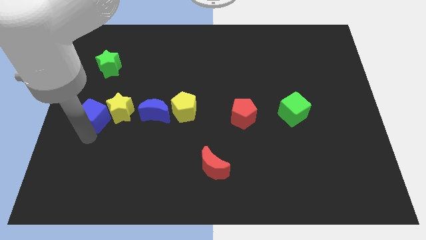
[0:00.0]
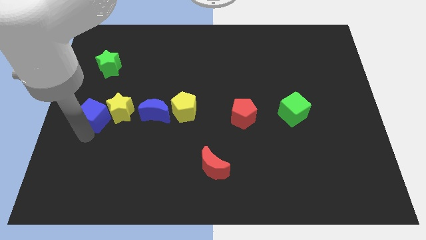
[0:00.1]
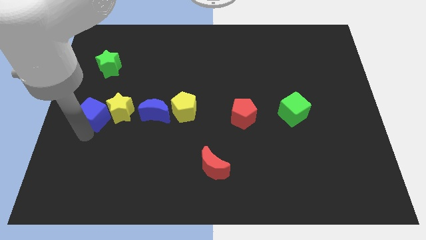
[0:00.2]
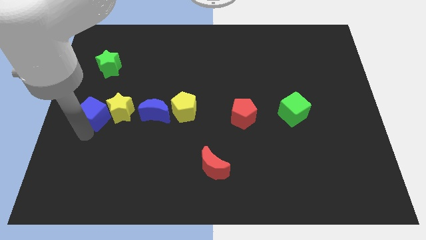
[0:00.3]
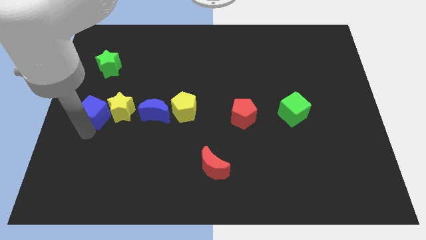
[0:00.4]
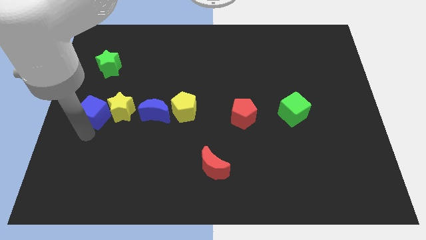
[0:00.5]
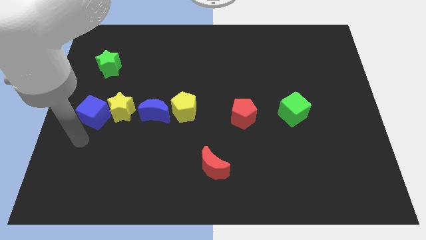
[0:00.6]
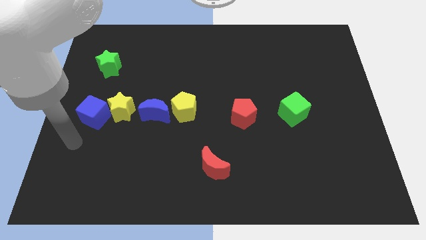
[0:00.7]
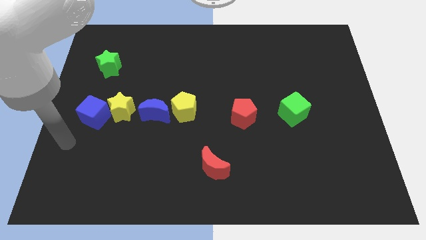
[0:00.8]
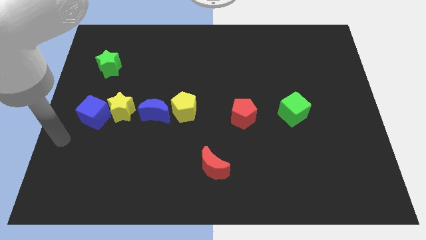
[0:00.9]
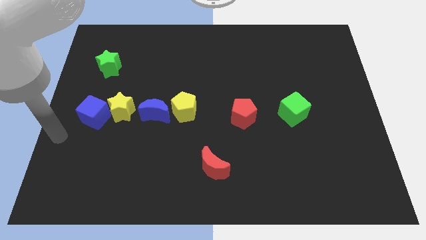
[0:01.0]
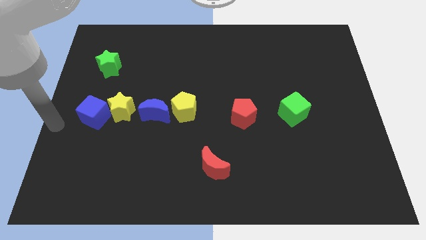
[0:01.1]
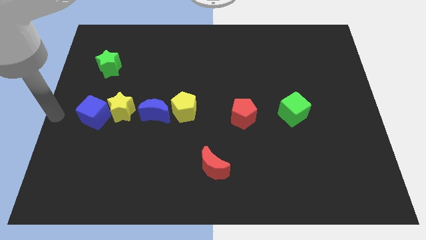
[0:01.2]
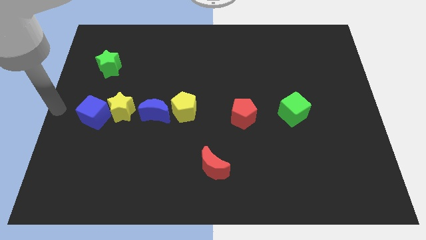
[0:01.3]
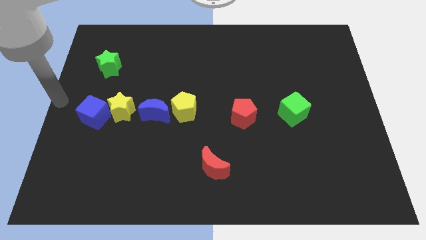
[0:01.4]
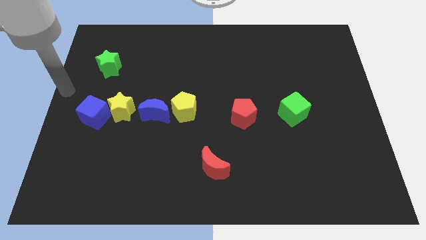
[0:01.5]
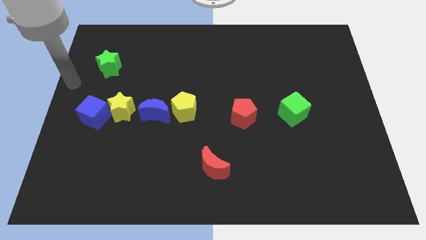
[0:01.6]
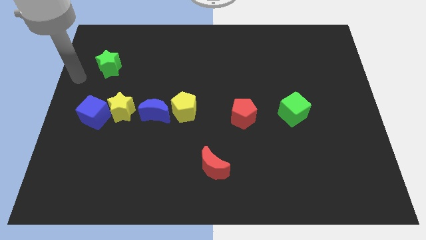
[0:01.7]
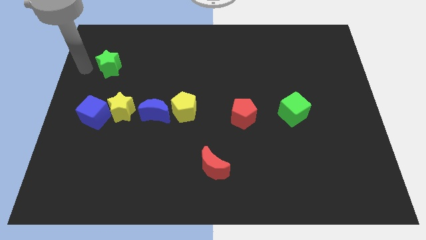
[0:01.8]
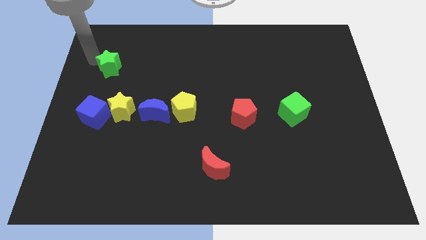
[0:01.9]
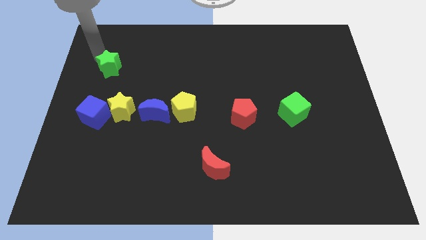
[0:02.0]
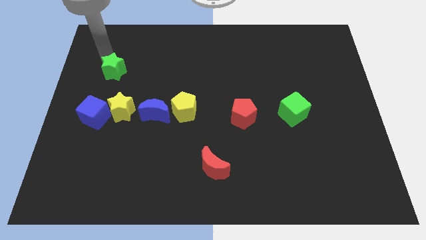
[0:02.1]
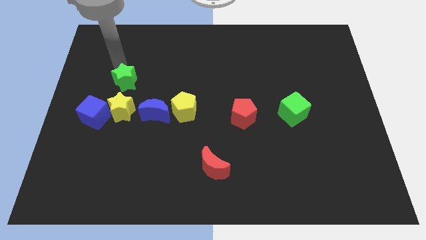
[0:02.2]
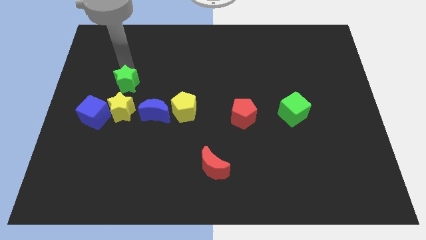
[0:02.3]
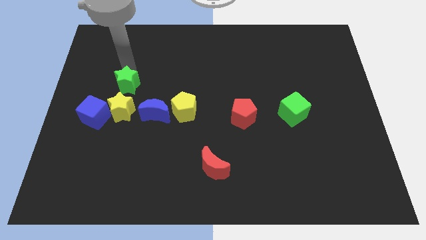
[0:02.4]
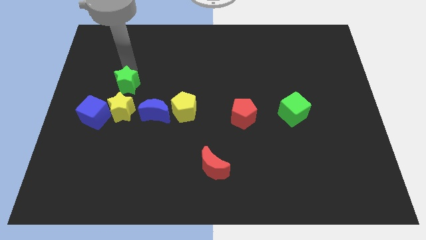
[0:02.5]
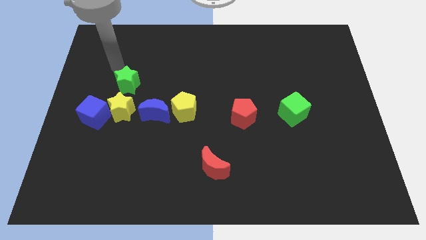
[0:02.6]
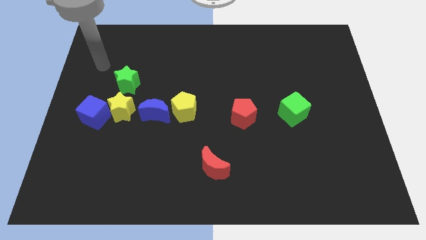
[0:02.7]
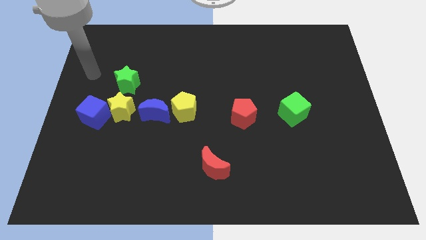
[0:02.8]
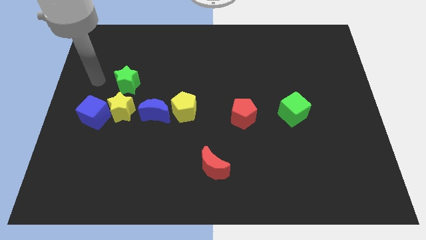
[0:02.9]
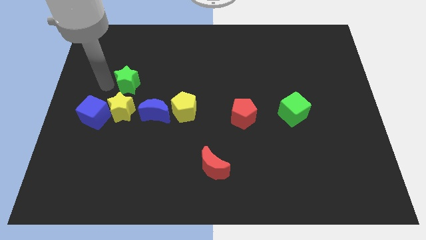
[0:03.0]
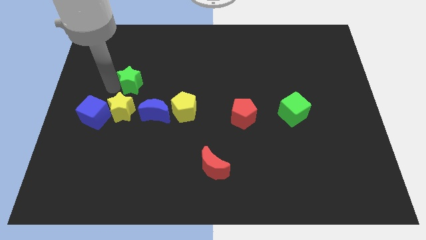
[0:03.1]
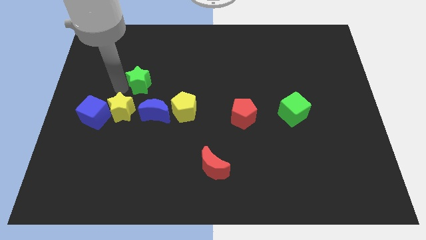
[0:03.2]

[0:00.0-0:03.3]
move the green star above the yellow star

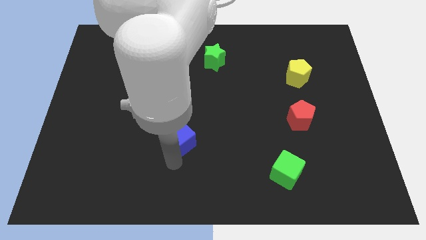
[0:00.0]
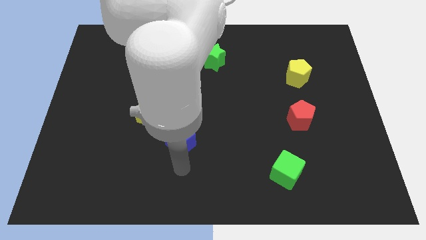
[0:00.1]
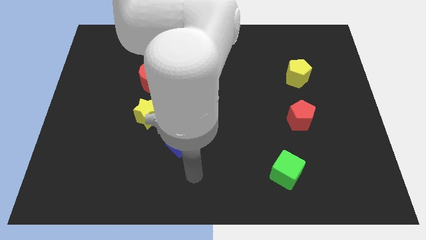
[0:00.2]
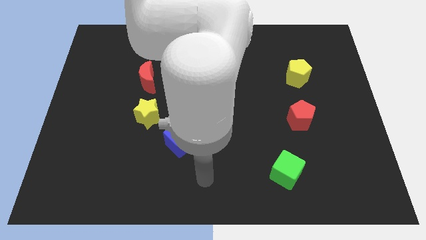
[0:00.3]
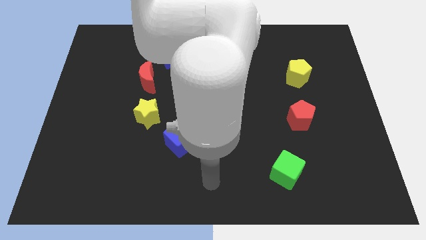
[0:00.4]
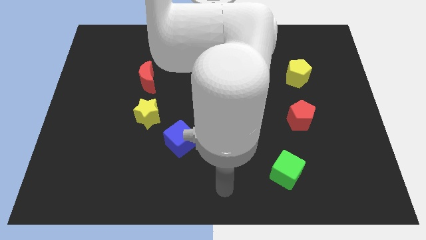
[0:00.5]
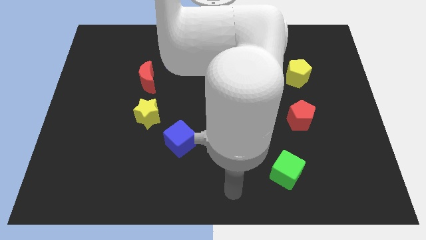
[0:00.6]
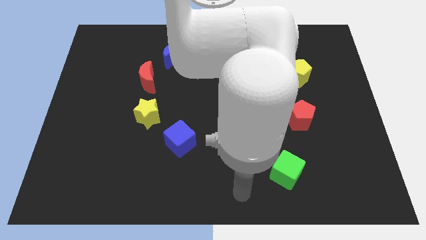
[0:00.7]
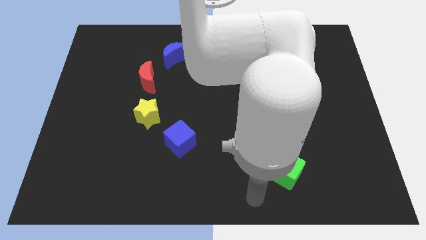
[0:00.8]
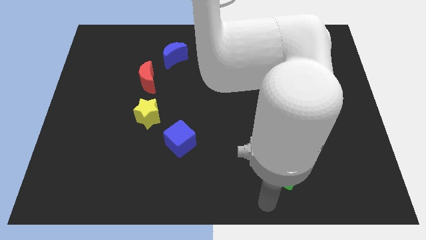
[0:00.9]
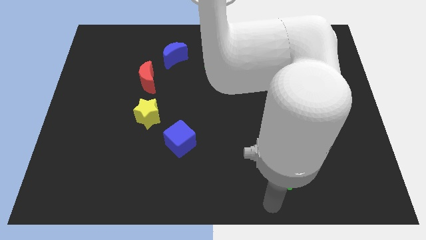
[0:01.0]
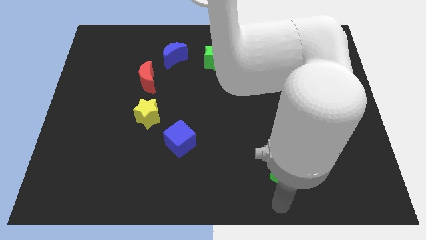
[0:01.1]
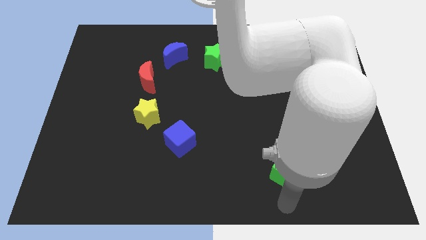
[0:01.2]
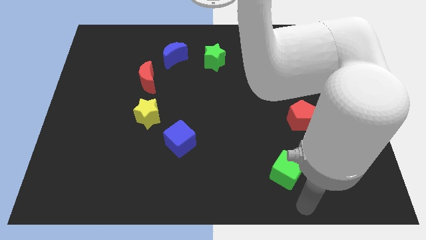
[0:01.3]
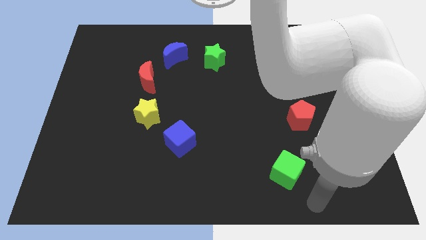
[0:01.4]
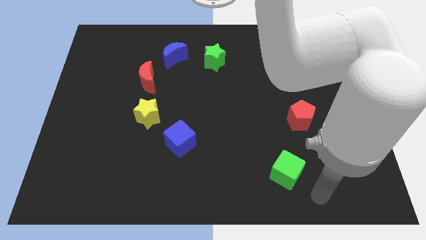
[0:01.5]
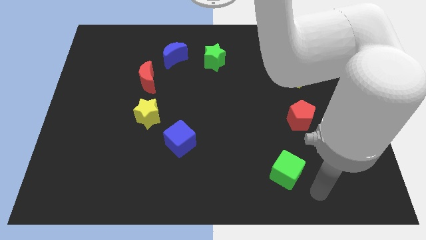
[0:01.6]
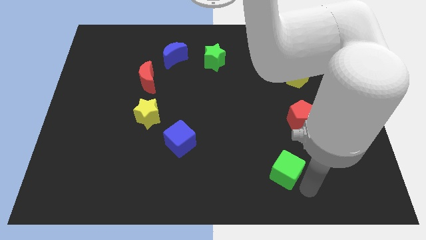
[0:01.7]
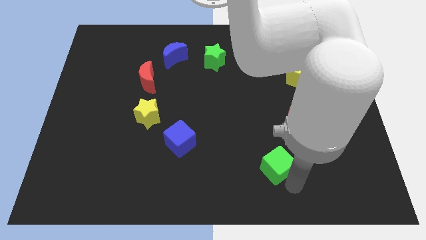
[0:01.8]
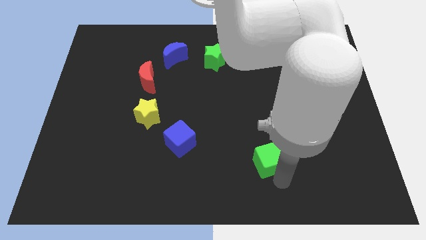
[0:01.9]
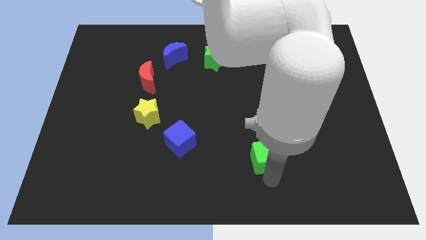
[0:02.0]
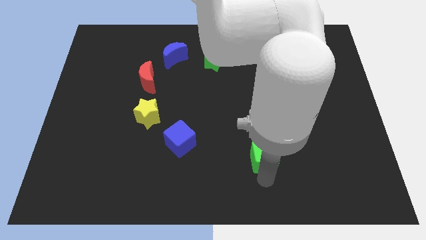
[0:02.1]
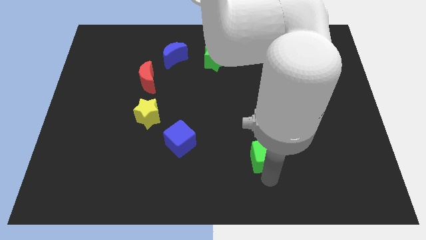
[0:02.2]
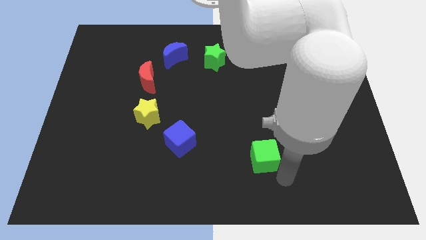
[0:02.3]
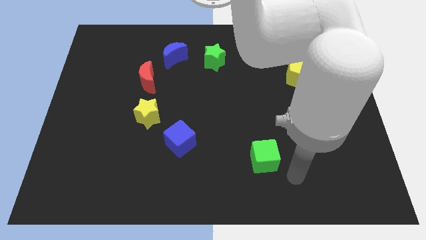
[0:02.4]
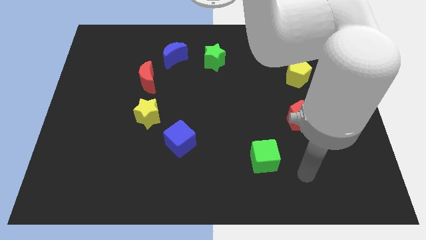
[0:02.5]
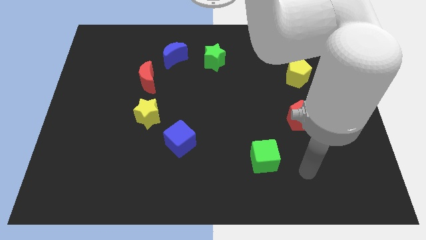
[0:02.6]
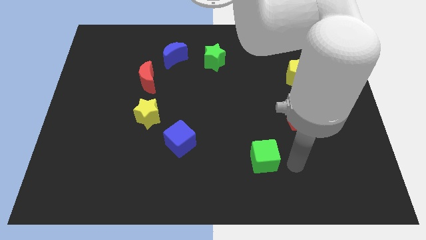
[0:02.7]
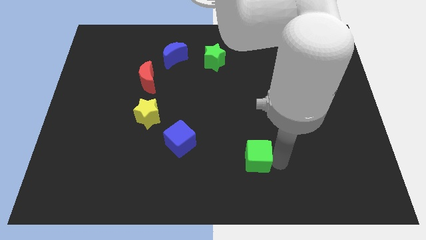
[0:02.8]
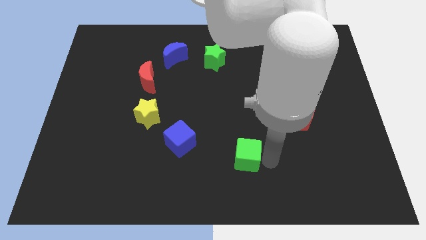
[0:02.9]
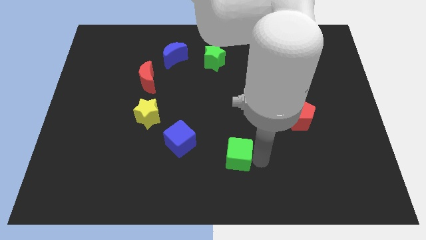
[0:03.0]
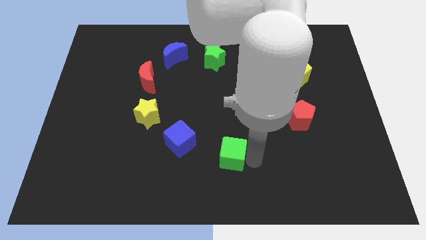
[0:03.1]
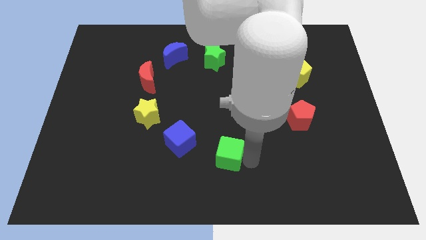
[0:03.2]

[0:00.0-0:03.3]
move the green cube diagonally to the bottom right of the blue cube

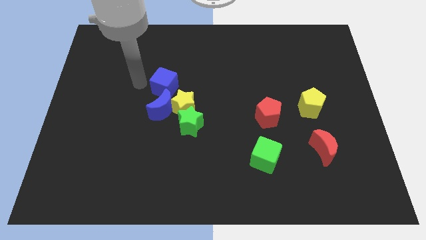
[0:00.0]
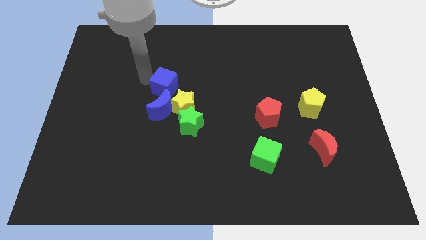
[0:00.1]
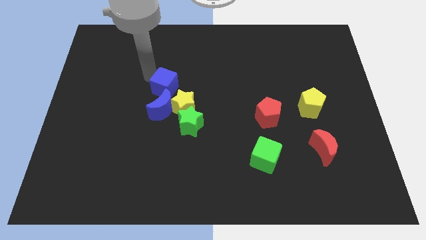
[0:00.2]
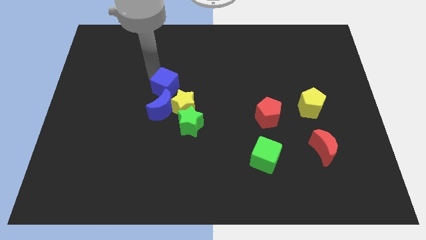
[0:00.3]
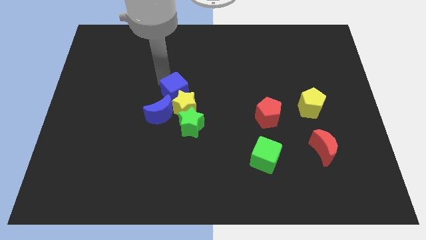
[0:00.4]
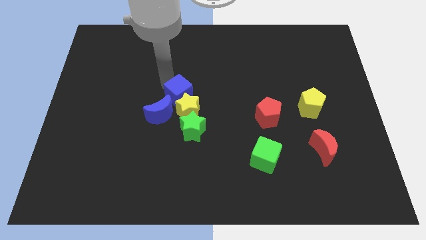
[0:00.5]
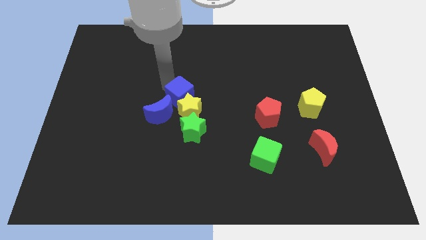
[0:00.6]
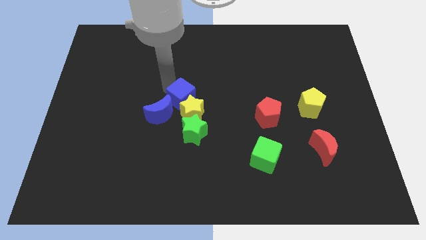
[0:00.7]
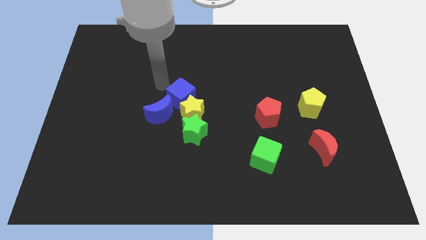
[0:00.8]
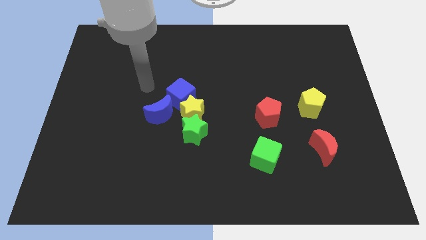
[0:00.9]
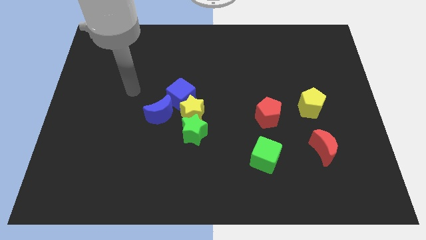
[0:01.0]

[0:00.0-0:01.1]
push blue cube into the yellow star

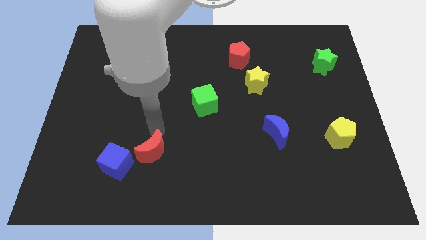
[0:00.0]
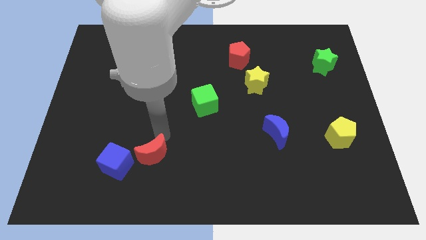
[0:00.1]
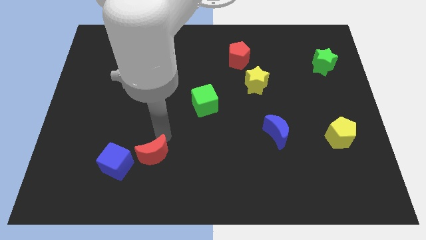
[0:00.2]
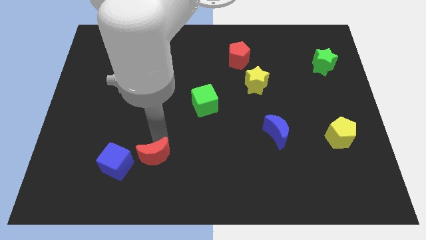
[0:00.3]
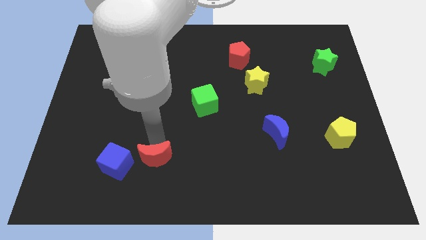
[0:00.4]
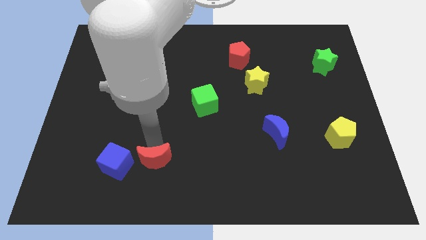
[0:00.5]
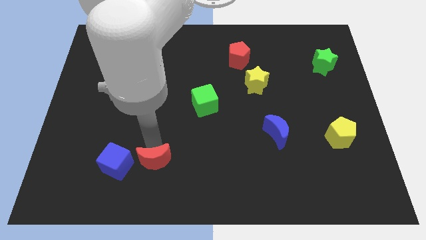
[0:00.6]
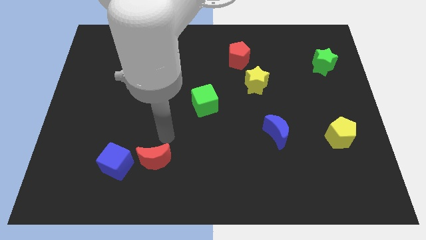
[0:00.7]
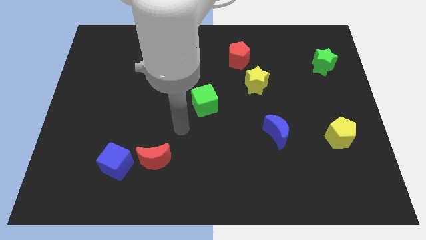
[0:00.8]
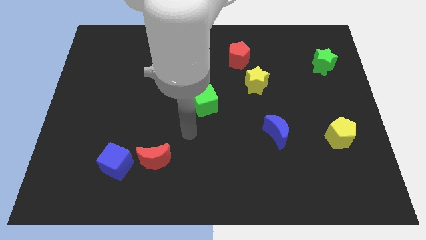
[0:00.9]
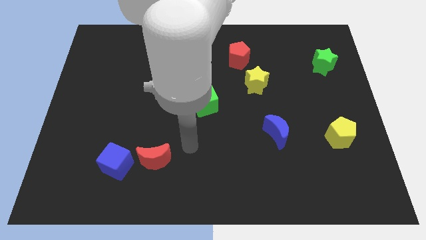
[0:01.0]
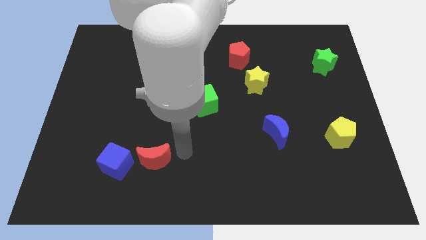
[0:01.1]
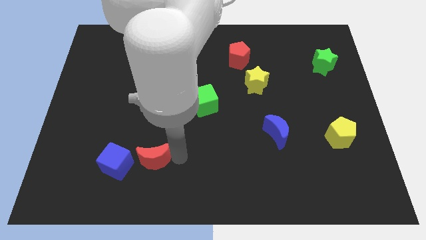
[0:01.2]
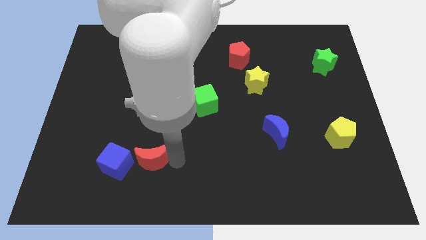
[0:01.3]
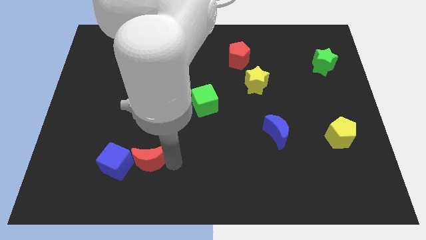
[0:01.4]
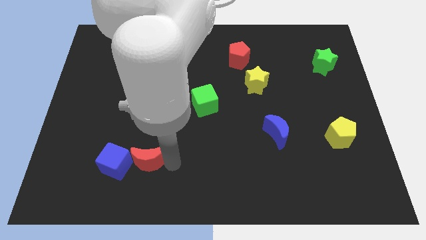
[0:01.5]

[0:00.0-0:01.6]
place the red moon to the right of the blue cube
